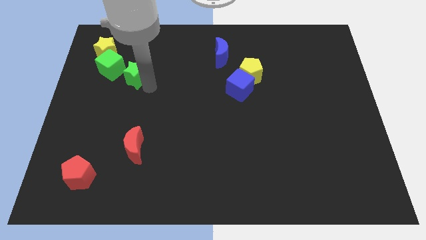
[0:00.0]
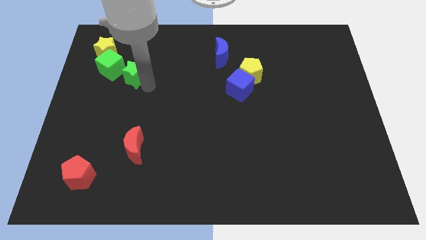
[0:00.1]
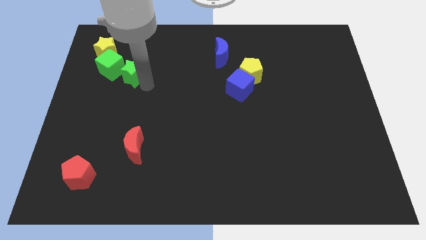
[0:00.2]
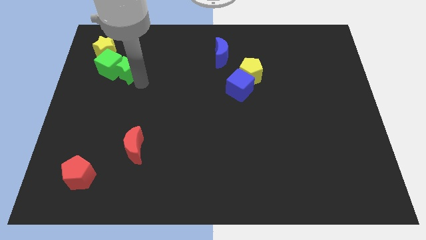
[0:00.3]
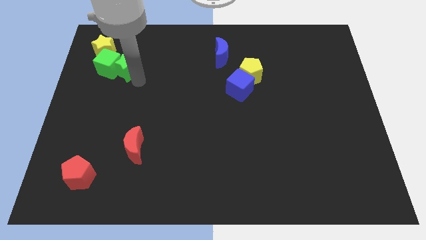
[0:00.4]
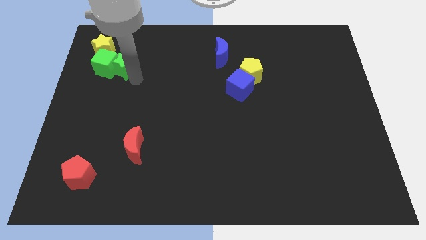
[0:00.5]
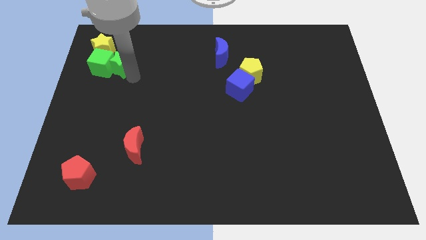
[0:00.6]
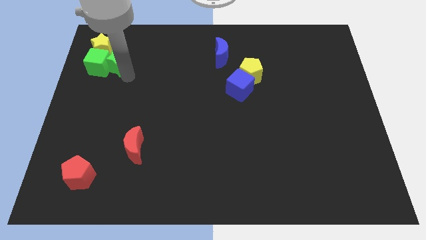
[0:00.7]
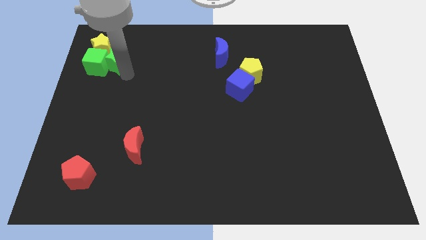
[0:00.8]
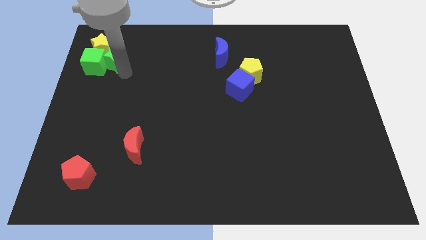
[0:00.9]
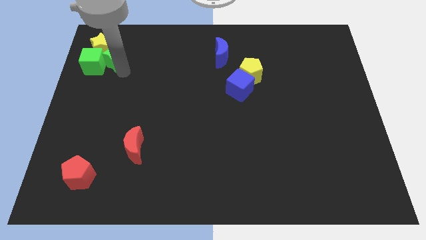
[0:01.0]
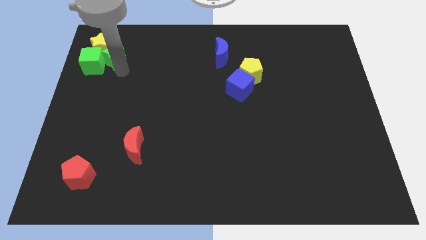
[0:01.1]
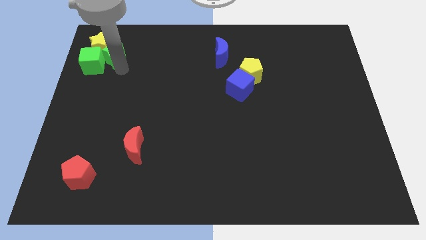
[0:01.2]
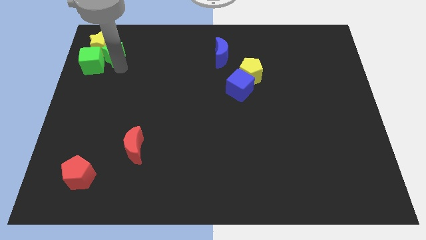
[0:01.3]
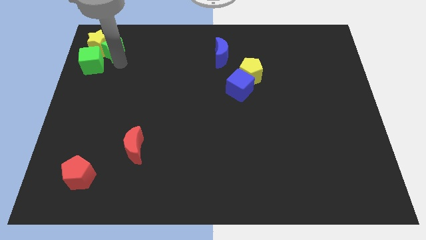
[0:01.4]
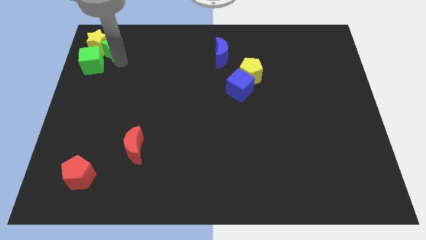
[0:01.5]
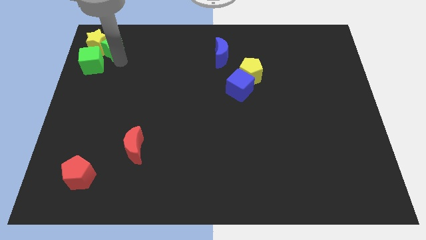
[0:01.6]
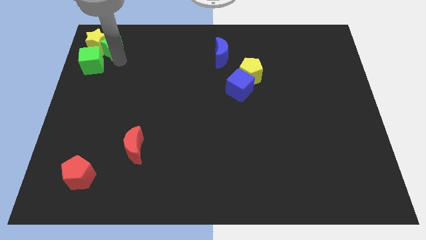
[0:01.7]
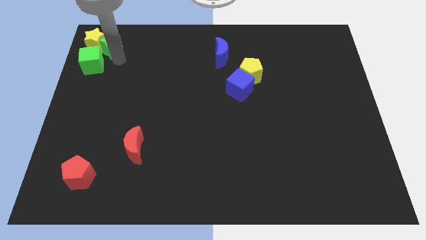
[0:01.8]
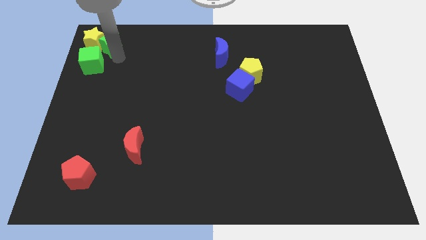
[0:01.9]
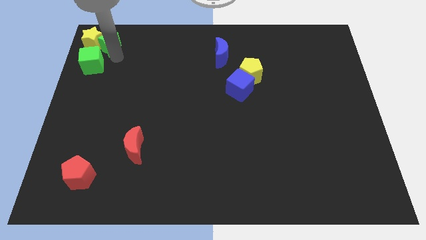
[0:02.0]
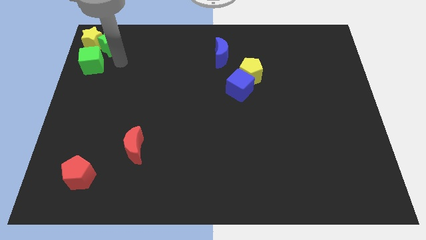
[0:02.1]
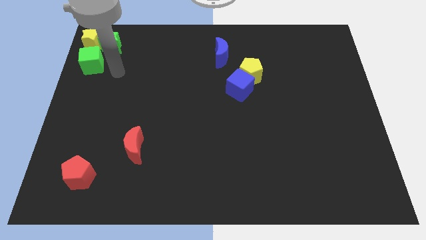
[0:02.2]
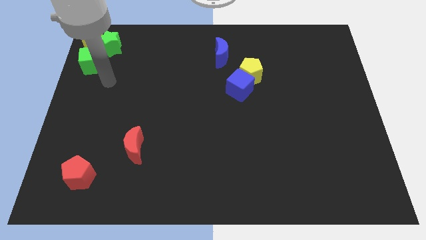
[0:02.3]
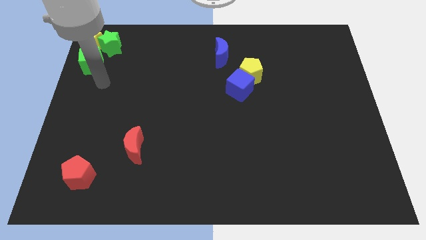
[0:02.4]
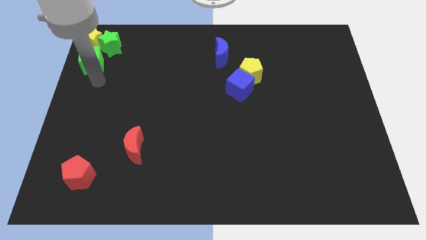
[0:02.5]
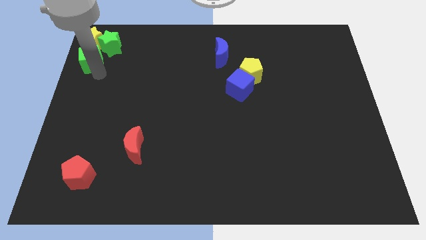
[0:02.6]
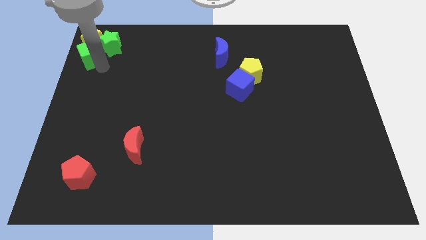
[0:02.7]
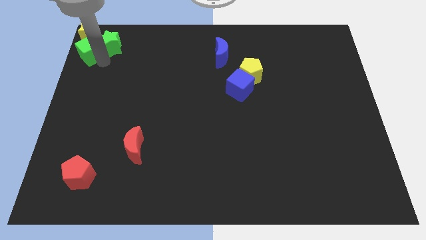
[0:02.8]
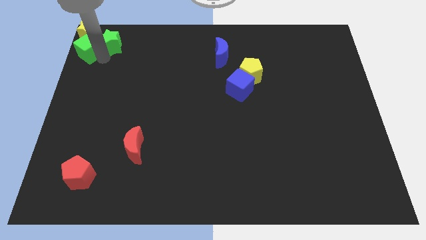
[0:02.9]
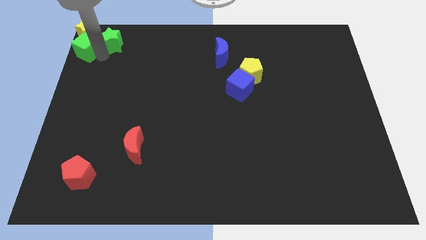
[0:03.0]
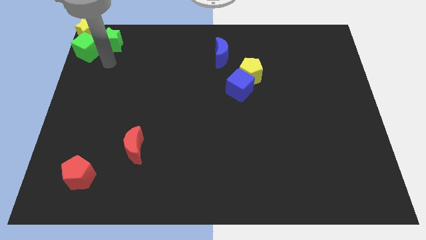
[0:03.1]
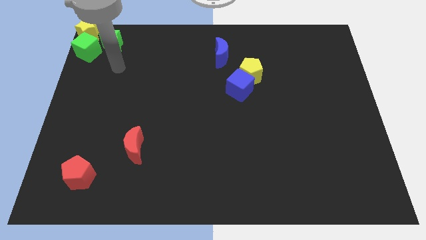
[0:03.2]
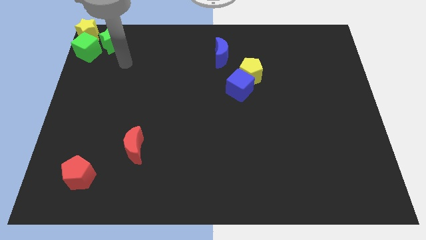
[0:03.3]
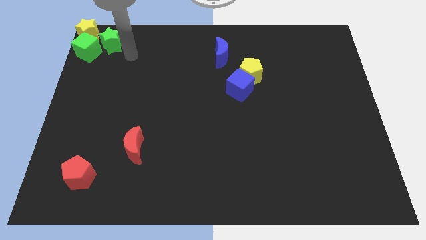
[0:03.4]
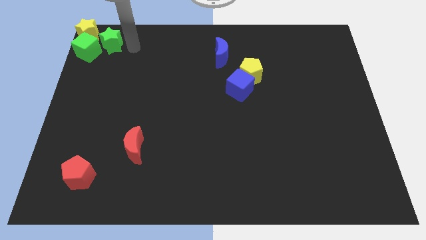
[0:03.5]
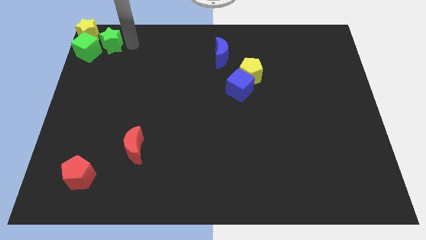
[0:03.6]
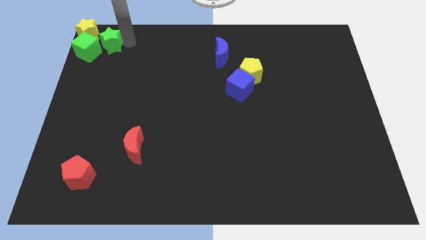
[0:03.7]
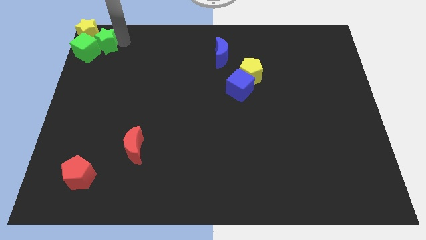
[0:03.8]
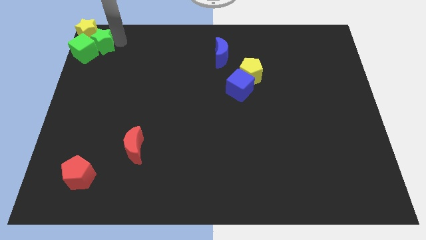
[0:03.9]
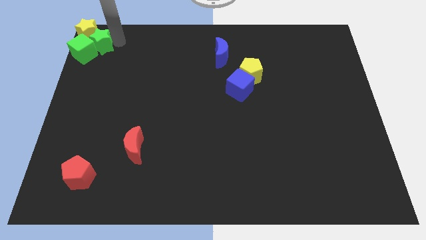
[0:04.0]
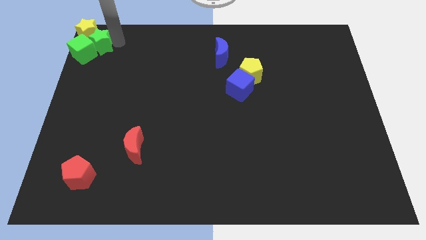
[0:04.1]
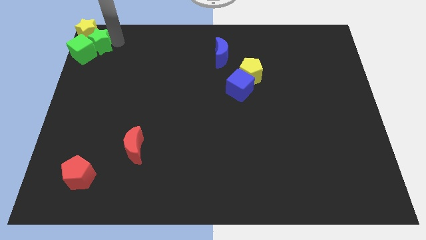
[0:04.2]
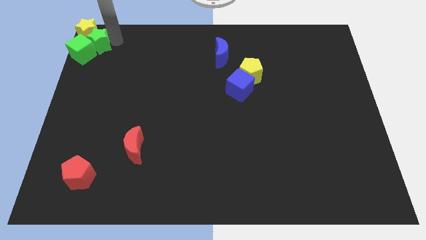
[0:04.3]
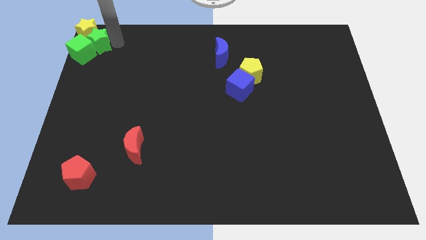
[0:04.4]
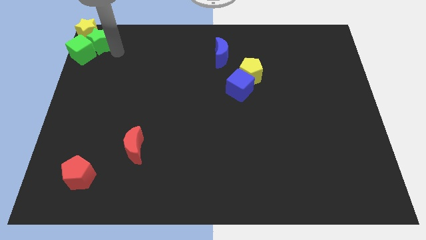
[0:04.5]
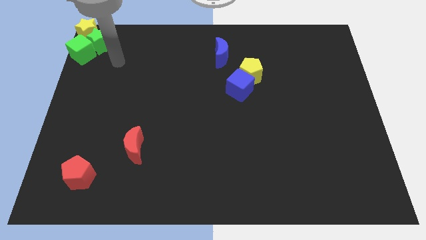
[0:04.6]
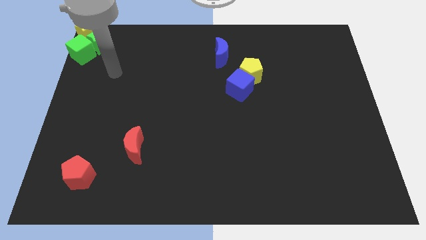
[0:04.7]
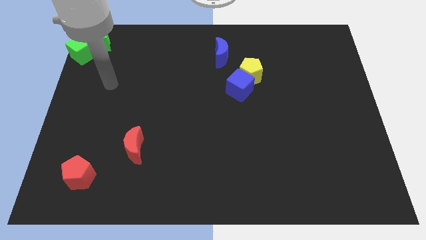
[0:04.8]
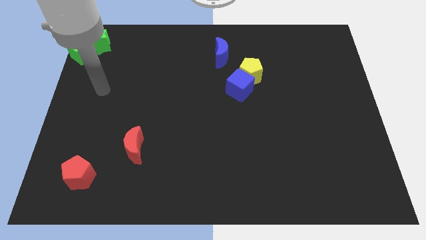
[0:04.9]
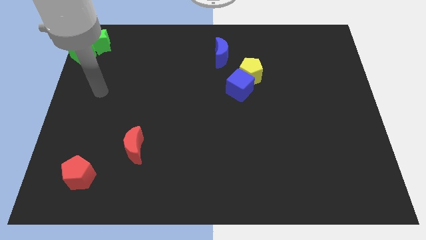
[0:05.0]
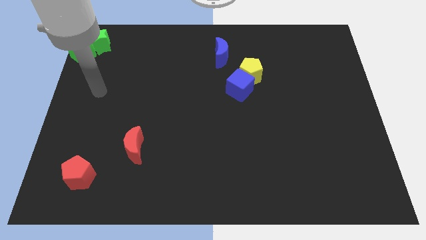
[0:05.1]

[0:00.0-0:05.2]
push a group of blocks to the top left corner of the board

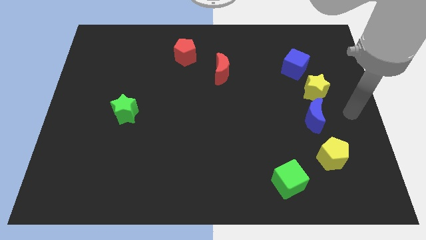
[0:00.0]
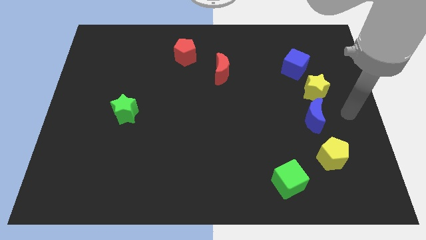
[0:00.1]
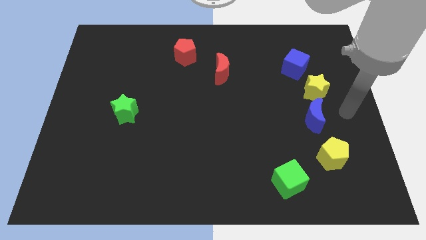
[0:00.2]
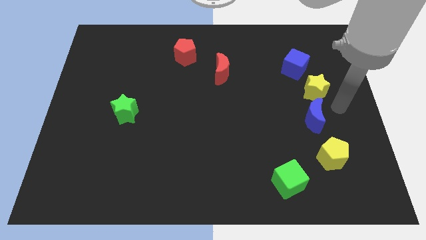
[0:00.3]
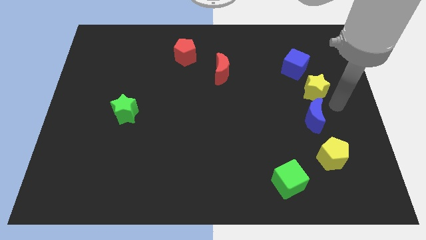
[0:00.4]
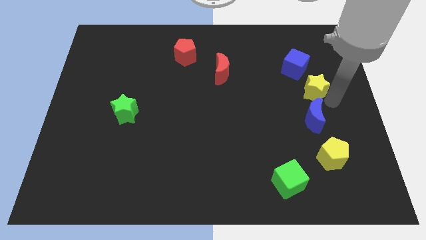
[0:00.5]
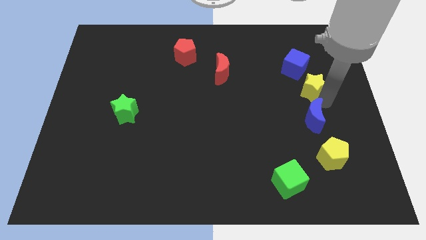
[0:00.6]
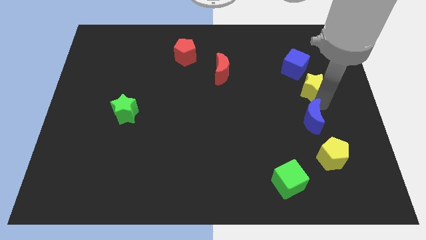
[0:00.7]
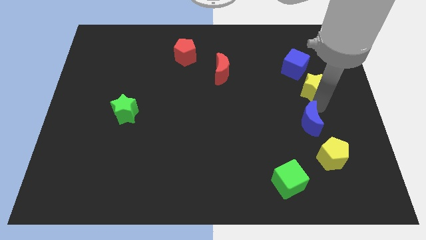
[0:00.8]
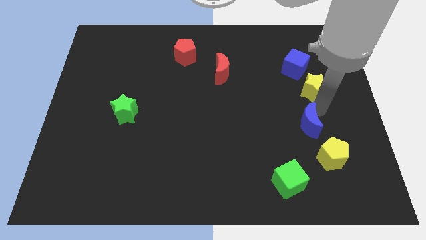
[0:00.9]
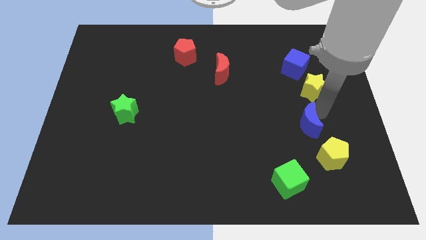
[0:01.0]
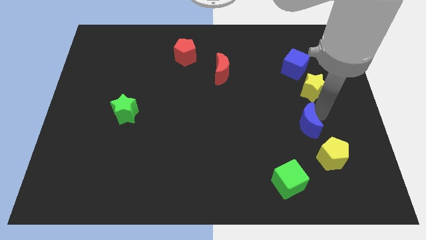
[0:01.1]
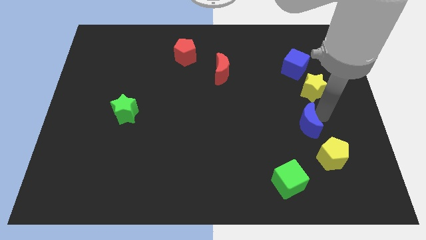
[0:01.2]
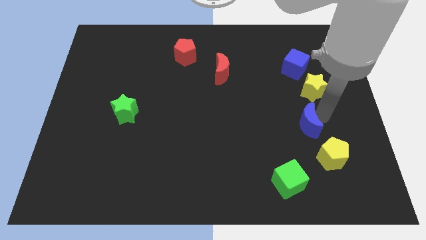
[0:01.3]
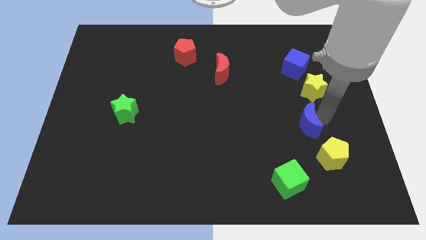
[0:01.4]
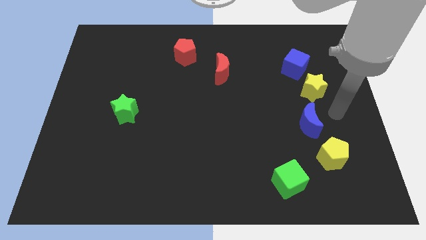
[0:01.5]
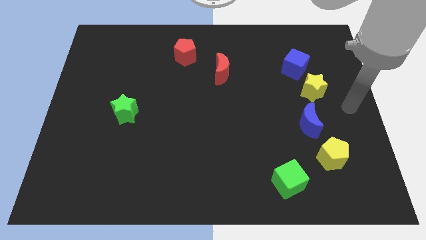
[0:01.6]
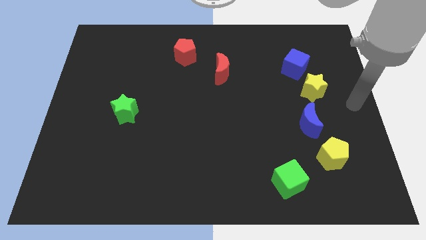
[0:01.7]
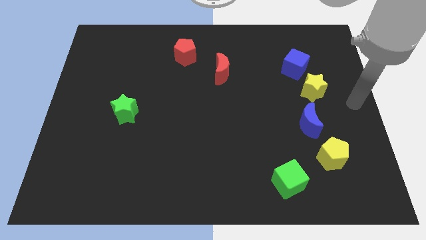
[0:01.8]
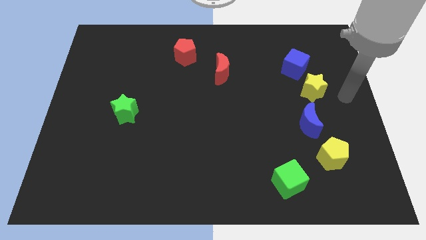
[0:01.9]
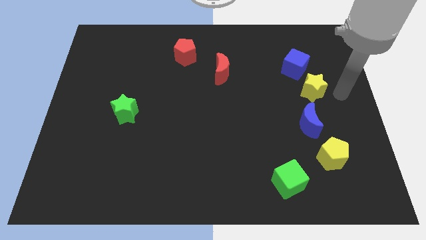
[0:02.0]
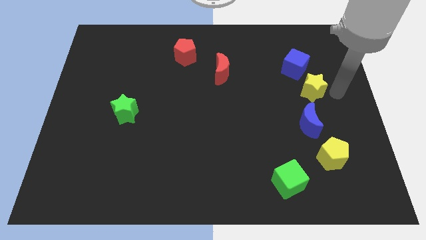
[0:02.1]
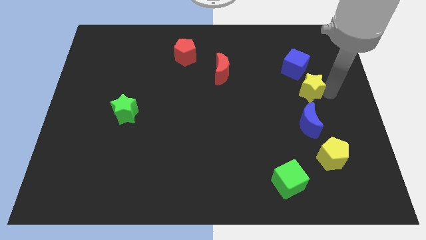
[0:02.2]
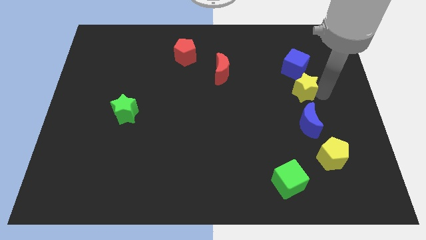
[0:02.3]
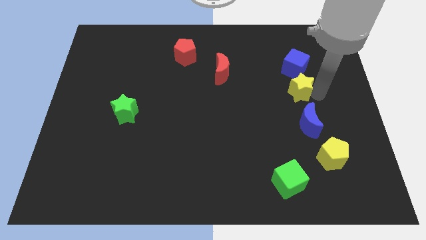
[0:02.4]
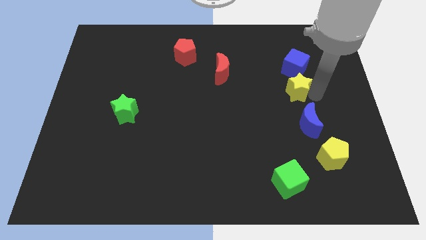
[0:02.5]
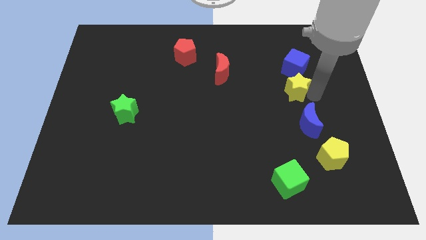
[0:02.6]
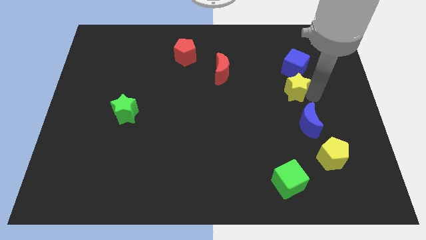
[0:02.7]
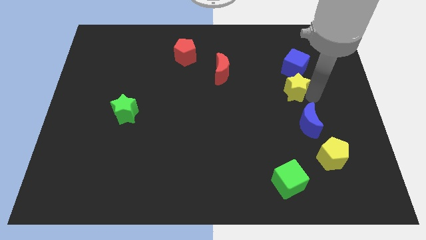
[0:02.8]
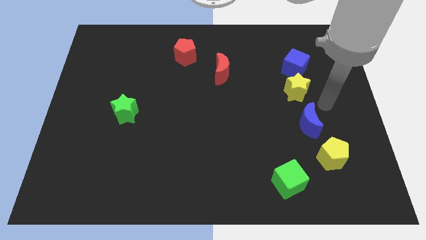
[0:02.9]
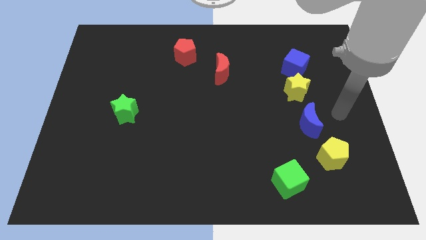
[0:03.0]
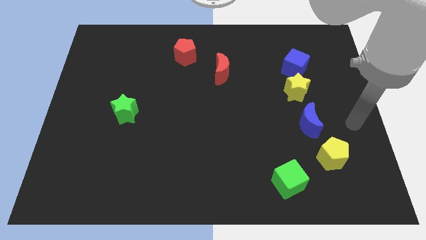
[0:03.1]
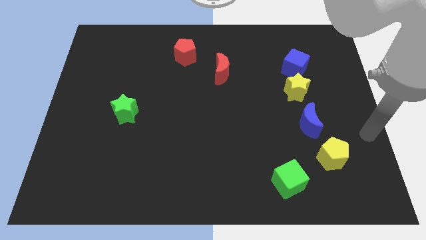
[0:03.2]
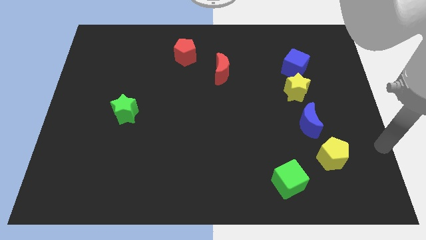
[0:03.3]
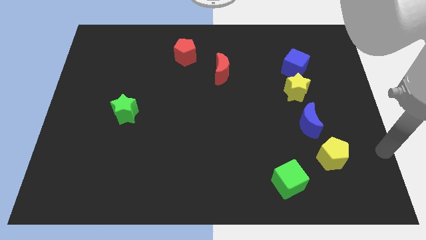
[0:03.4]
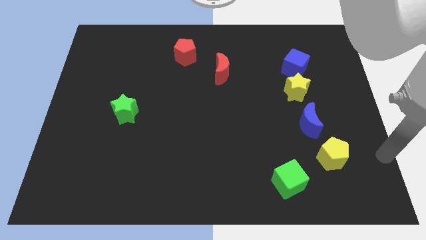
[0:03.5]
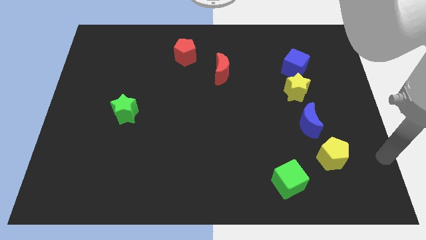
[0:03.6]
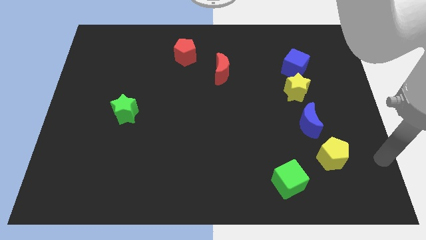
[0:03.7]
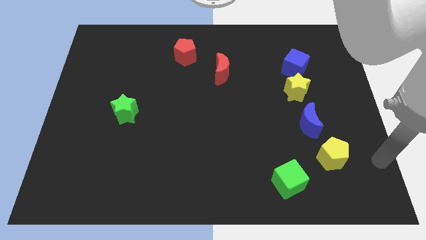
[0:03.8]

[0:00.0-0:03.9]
push yellow star in between blue cube and blue crescent
